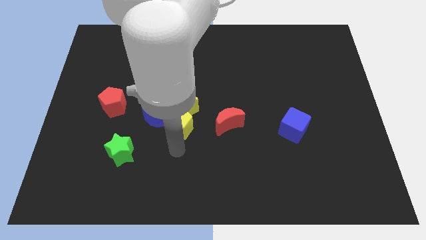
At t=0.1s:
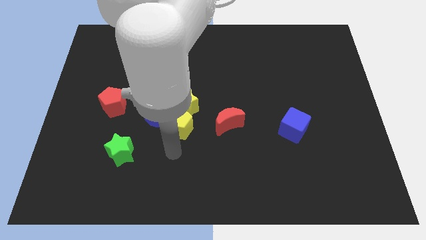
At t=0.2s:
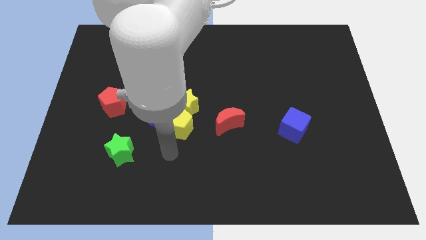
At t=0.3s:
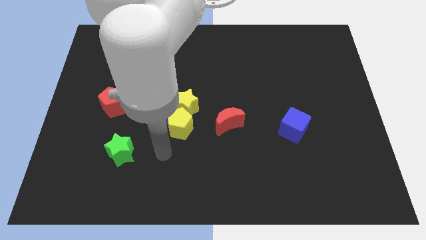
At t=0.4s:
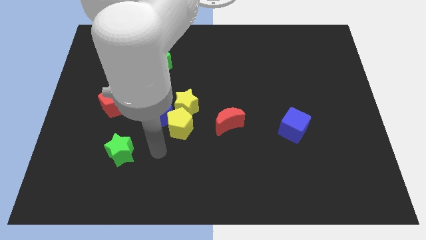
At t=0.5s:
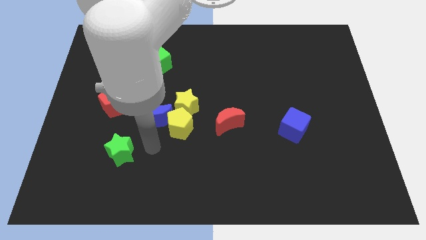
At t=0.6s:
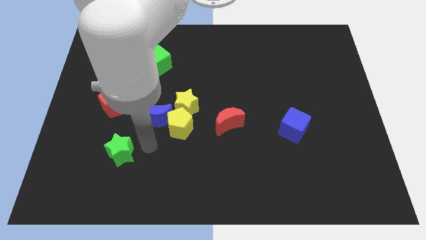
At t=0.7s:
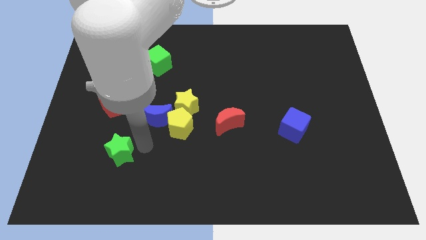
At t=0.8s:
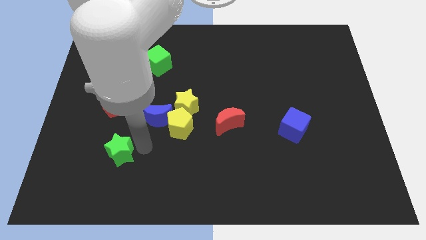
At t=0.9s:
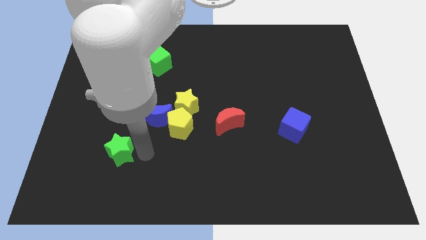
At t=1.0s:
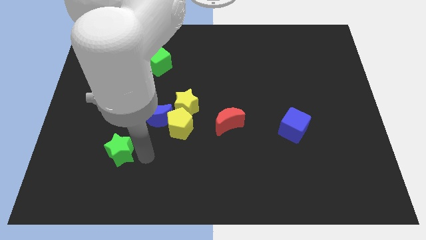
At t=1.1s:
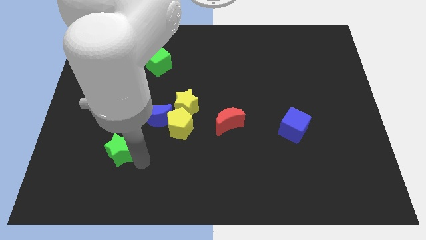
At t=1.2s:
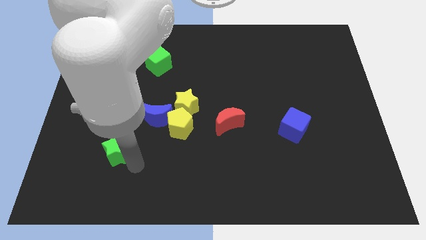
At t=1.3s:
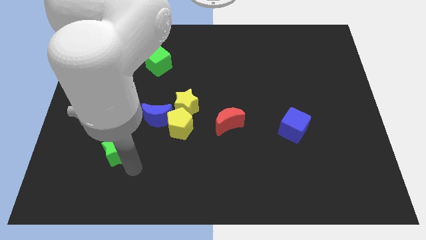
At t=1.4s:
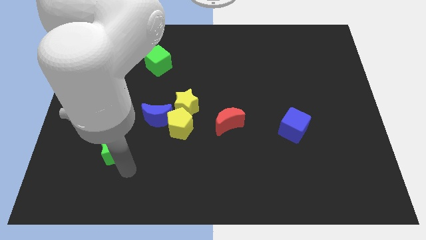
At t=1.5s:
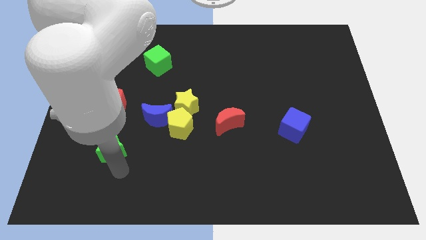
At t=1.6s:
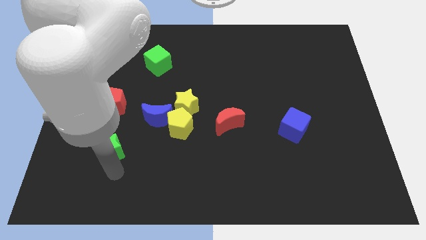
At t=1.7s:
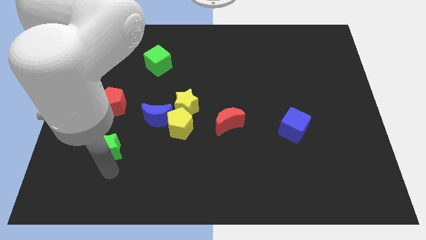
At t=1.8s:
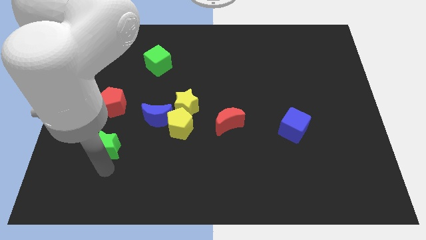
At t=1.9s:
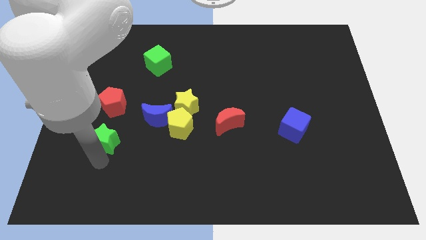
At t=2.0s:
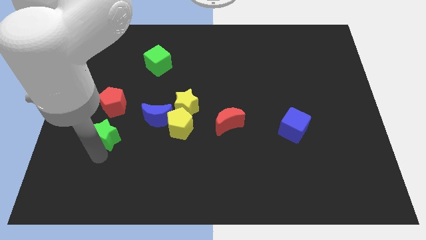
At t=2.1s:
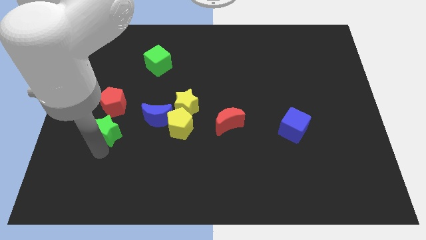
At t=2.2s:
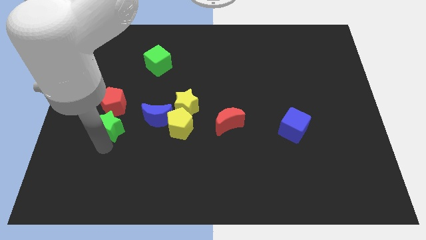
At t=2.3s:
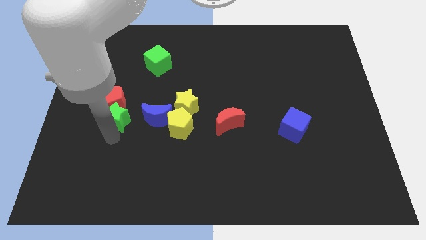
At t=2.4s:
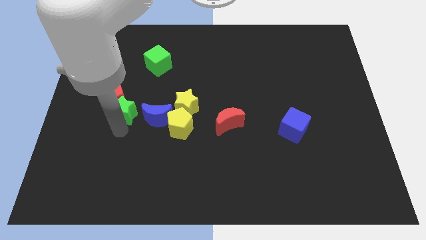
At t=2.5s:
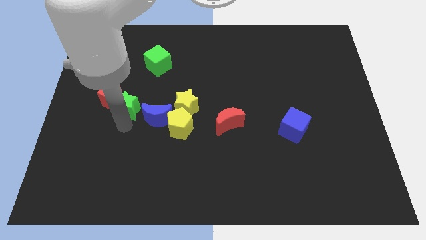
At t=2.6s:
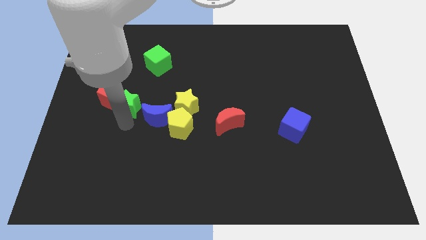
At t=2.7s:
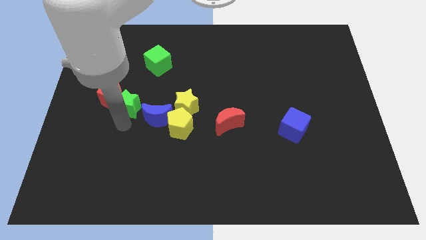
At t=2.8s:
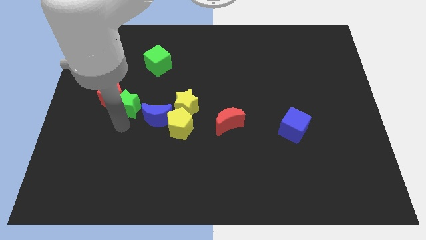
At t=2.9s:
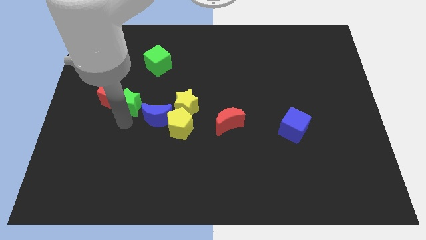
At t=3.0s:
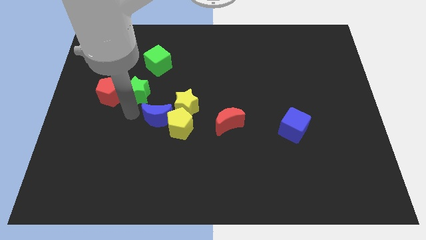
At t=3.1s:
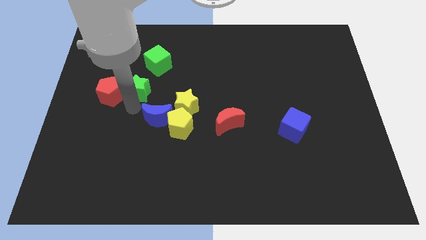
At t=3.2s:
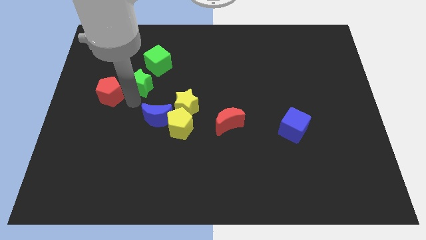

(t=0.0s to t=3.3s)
place green star to the right of the red pentagon

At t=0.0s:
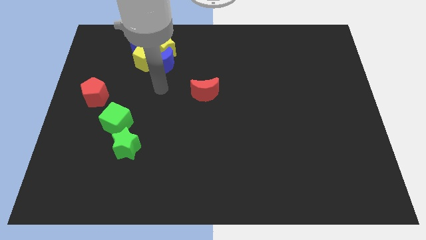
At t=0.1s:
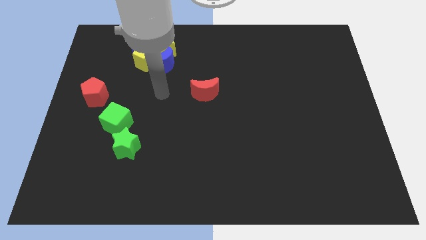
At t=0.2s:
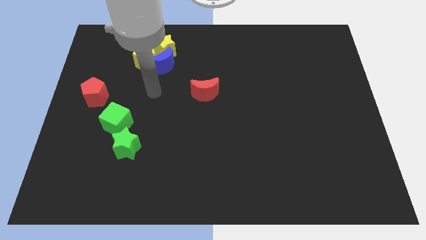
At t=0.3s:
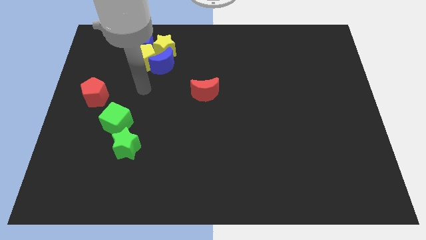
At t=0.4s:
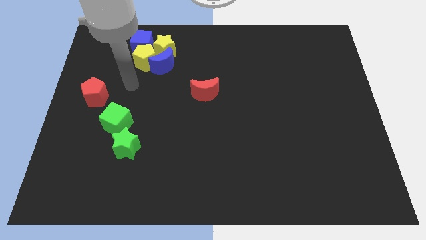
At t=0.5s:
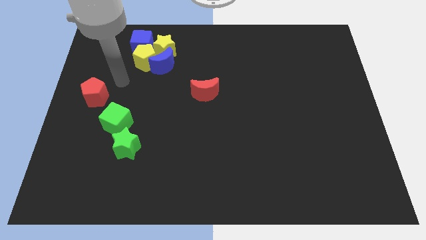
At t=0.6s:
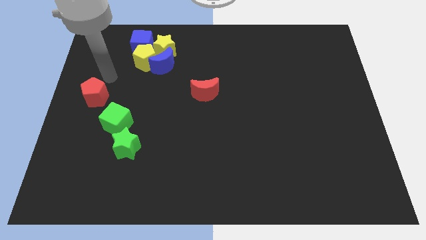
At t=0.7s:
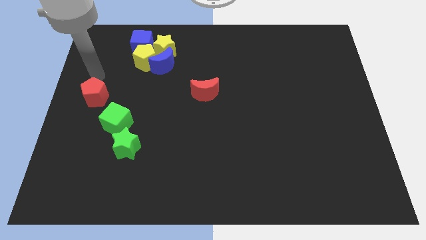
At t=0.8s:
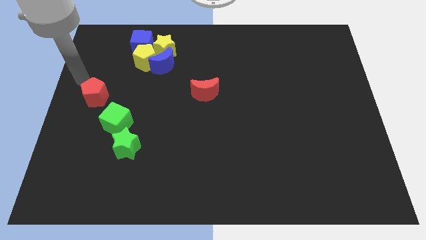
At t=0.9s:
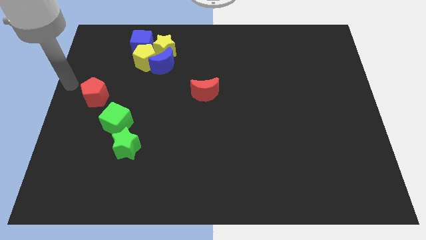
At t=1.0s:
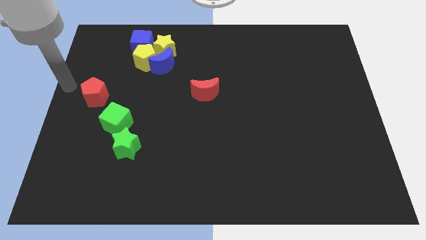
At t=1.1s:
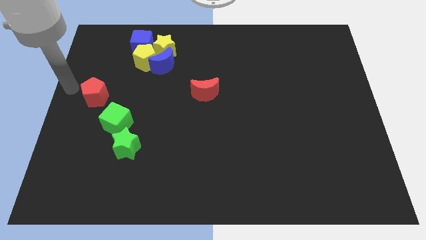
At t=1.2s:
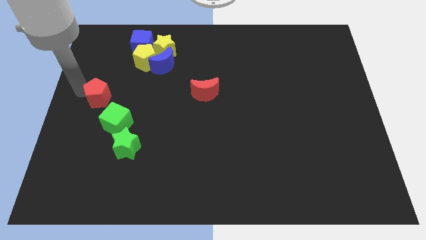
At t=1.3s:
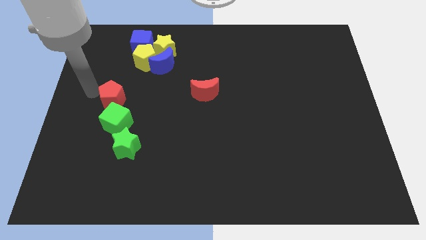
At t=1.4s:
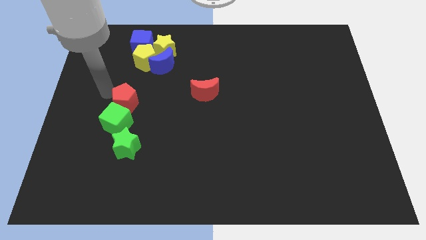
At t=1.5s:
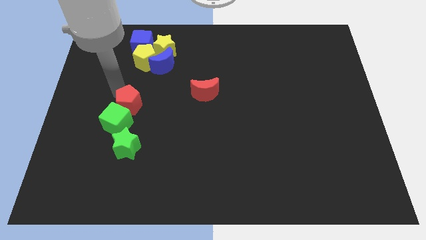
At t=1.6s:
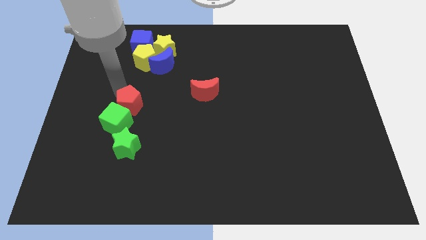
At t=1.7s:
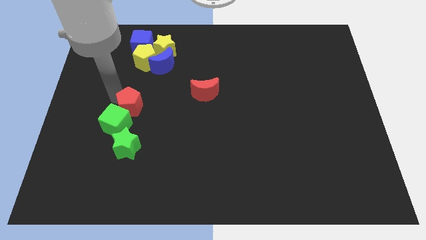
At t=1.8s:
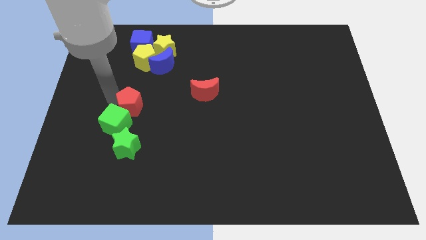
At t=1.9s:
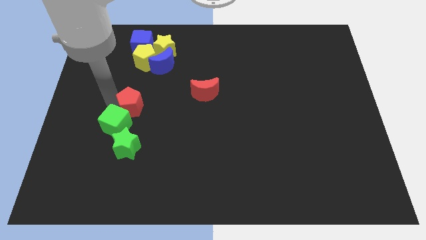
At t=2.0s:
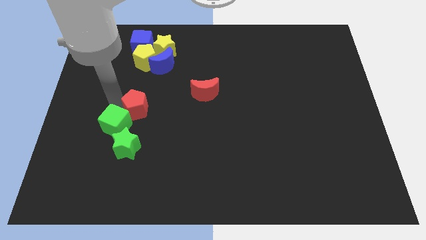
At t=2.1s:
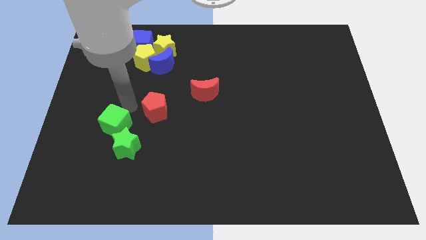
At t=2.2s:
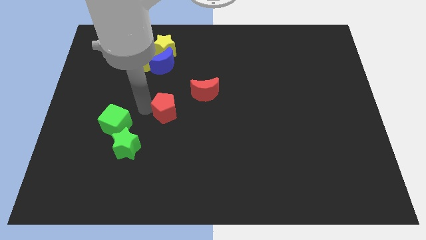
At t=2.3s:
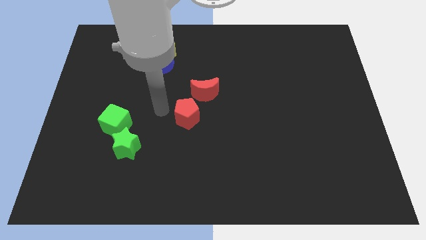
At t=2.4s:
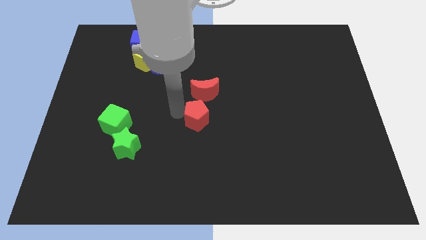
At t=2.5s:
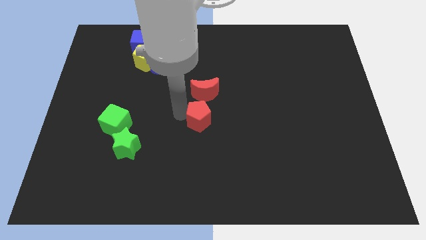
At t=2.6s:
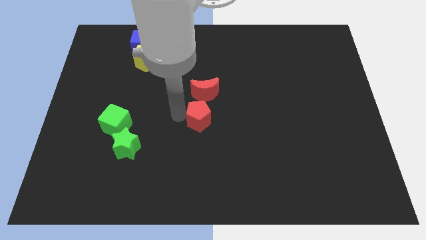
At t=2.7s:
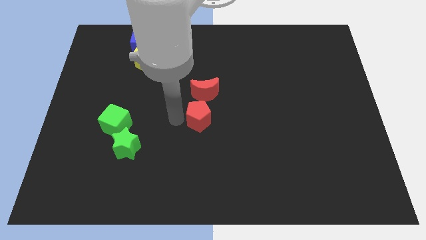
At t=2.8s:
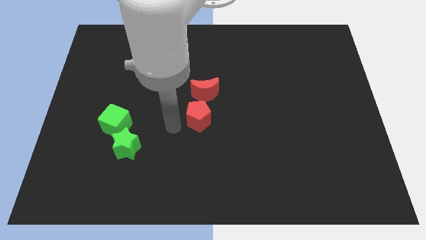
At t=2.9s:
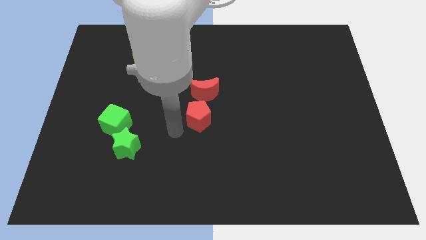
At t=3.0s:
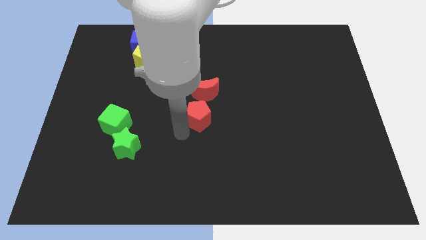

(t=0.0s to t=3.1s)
place the red pentagon vertically below the red moon

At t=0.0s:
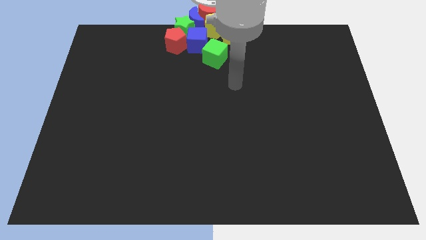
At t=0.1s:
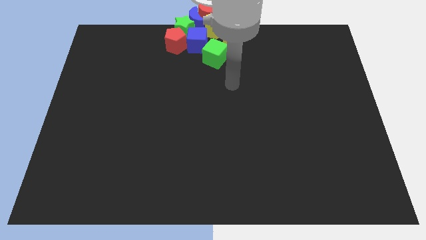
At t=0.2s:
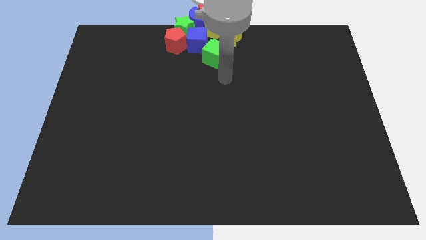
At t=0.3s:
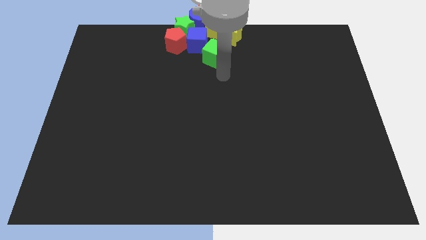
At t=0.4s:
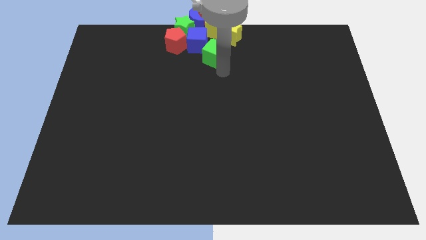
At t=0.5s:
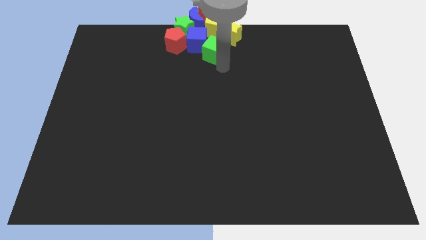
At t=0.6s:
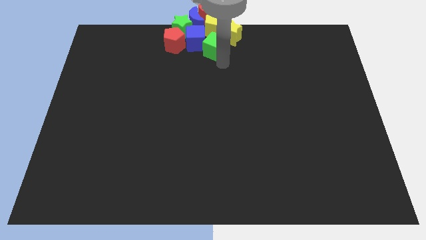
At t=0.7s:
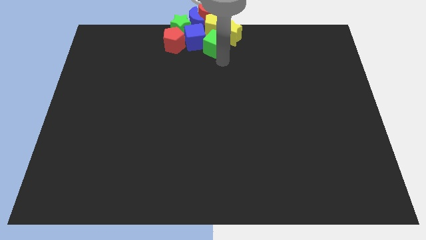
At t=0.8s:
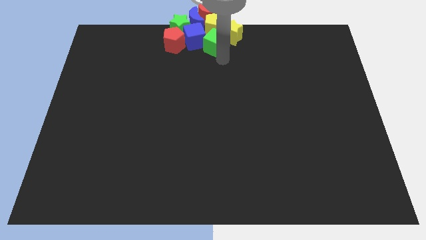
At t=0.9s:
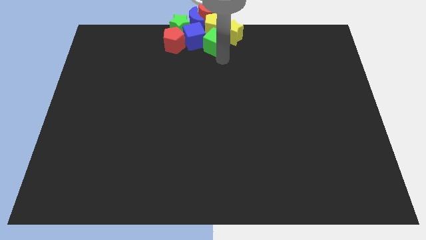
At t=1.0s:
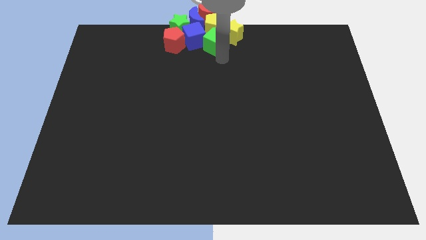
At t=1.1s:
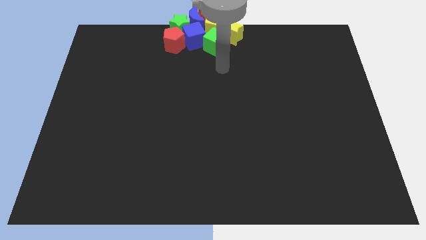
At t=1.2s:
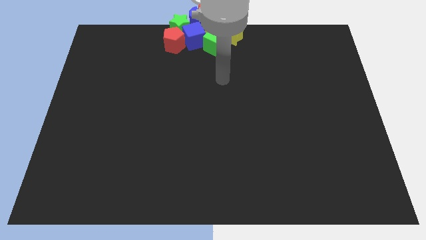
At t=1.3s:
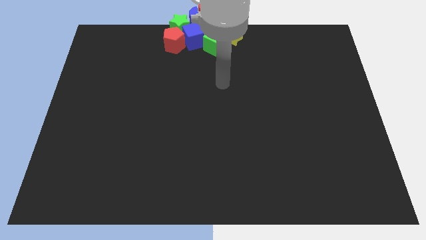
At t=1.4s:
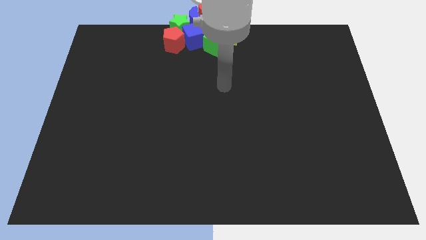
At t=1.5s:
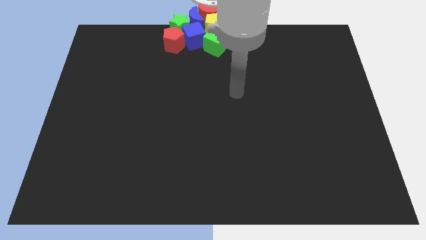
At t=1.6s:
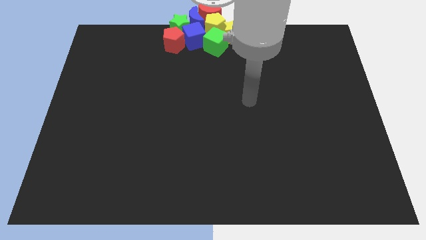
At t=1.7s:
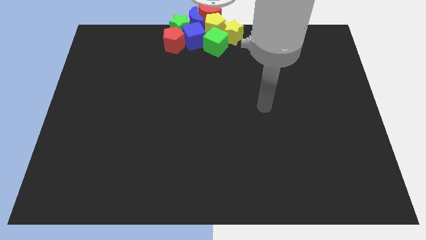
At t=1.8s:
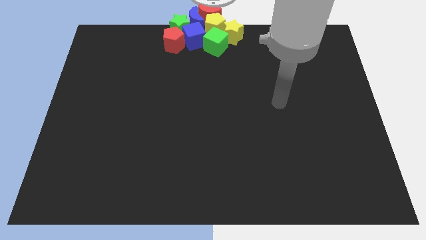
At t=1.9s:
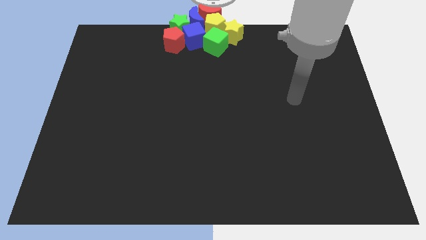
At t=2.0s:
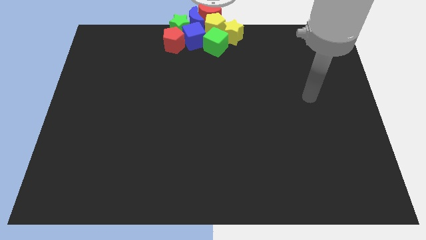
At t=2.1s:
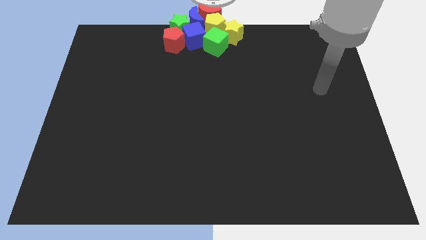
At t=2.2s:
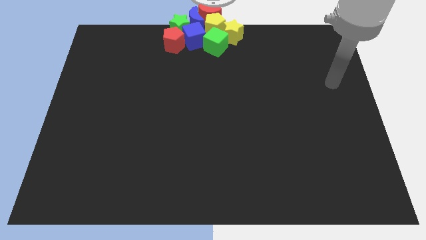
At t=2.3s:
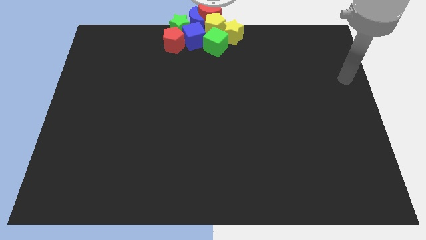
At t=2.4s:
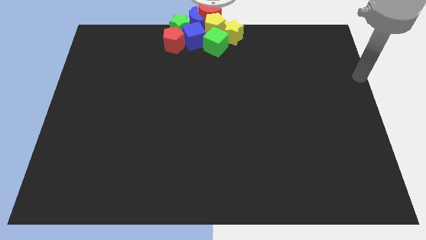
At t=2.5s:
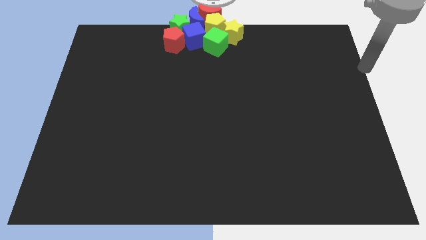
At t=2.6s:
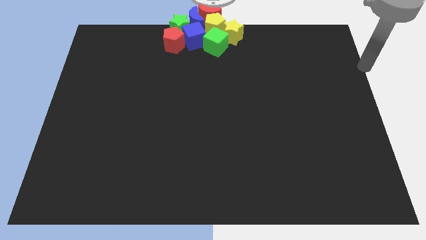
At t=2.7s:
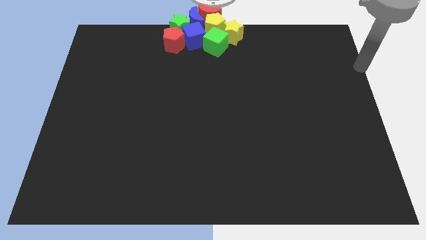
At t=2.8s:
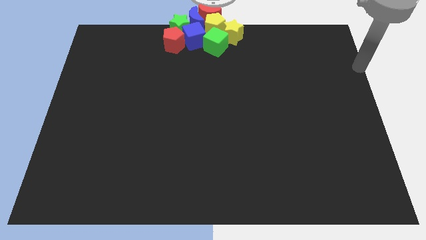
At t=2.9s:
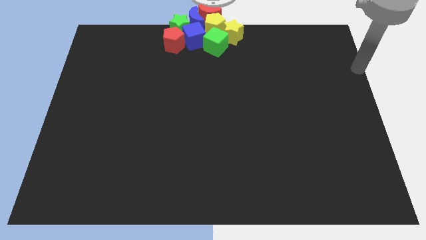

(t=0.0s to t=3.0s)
drag your arm towards top right center
